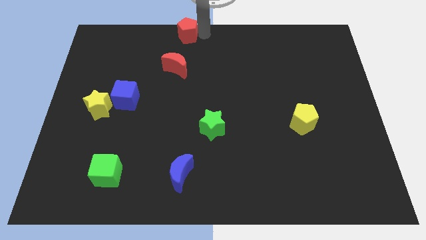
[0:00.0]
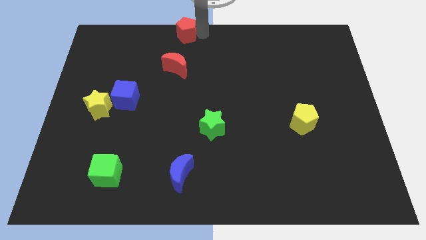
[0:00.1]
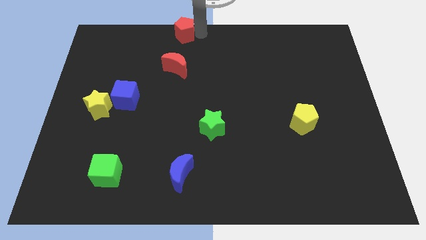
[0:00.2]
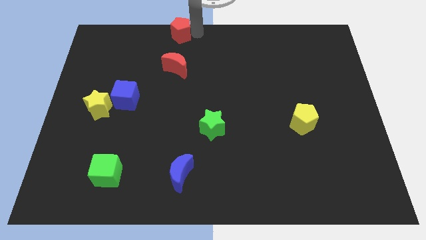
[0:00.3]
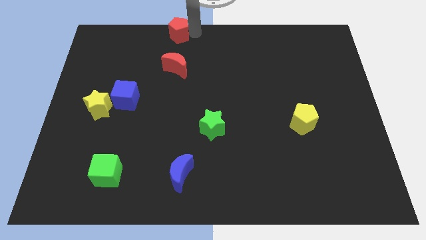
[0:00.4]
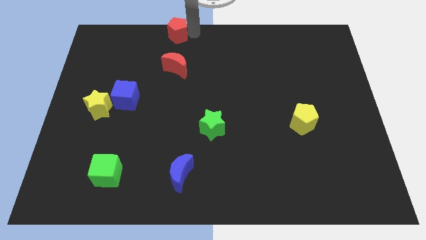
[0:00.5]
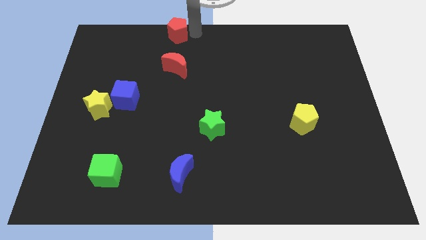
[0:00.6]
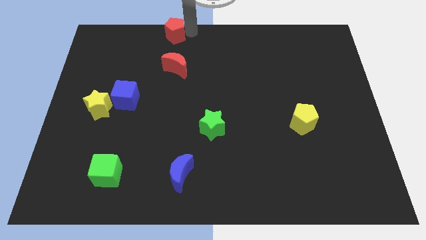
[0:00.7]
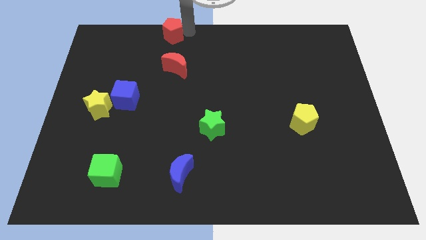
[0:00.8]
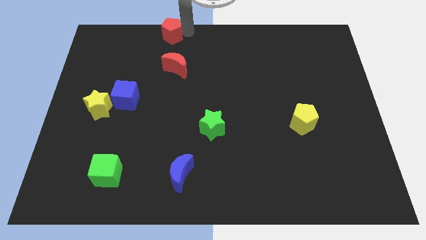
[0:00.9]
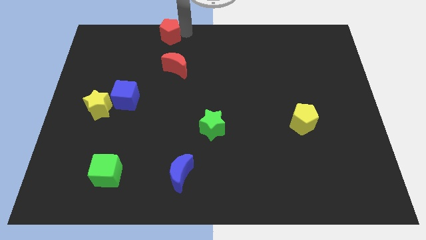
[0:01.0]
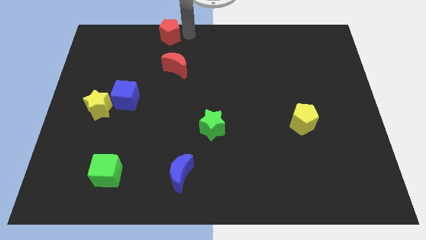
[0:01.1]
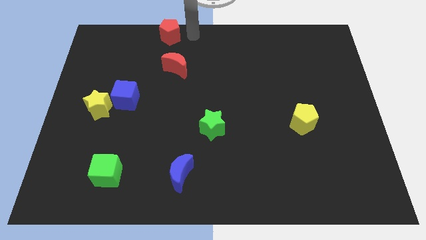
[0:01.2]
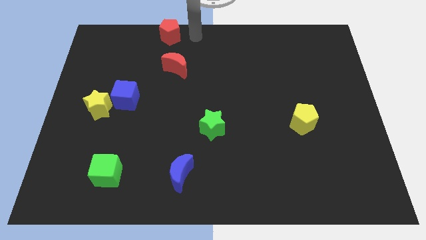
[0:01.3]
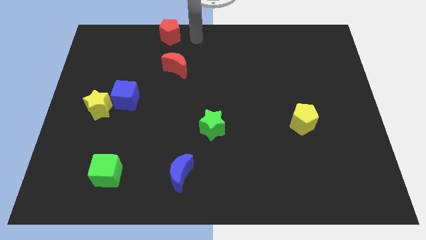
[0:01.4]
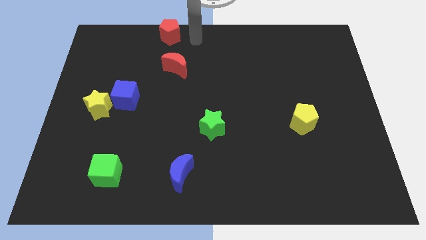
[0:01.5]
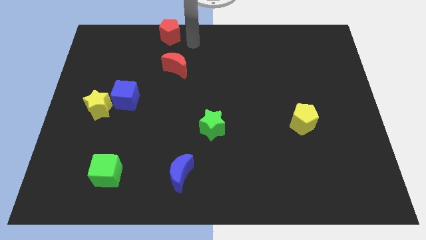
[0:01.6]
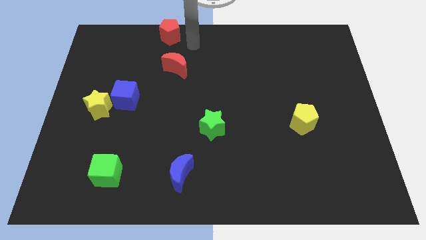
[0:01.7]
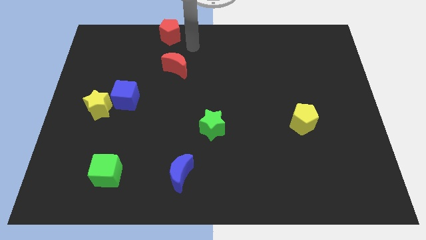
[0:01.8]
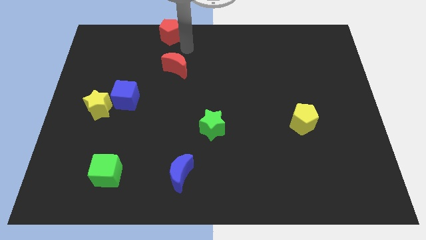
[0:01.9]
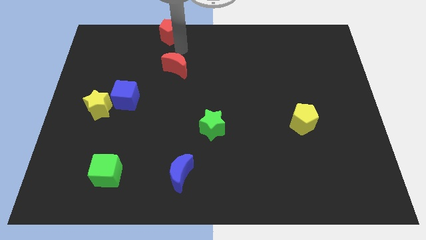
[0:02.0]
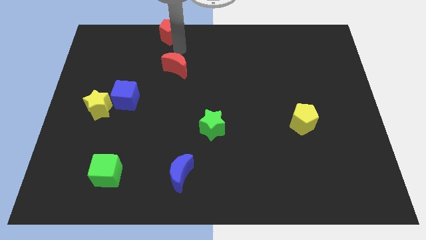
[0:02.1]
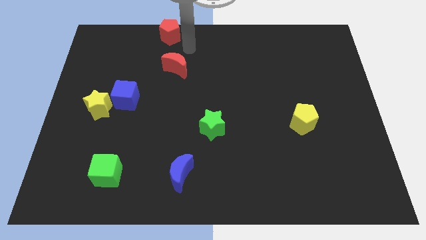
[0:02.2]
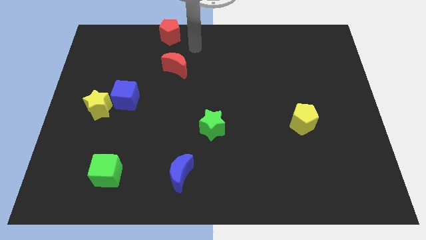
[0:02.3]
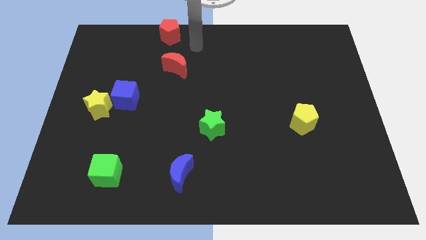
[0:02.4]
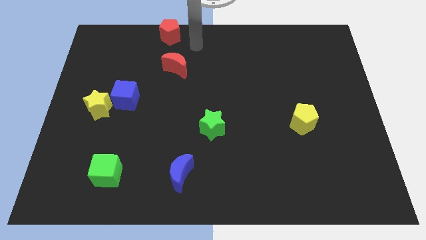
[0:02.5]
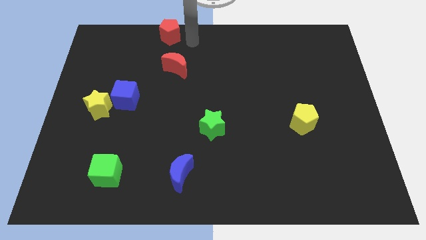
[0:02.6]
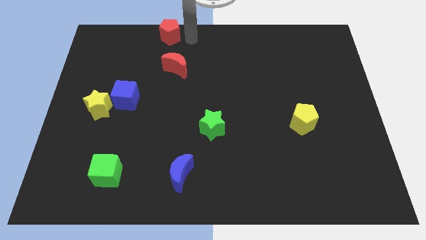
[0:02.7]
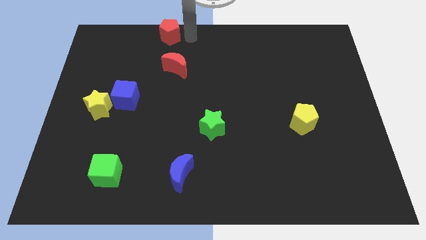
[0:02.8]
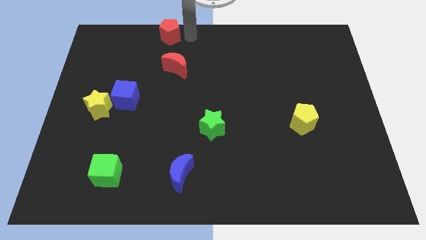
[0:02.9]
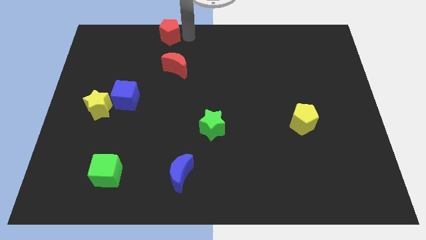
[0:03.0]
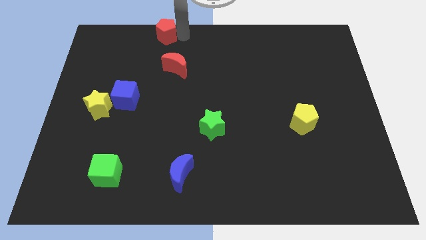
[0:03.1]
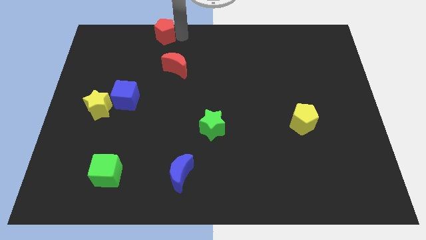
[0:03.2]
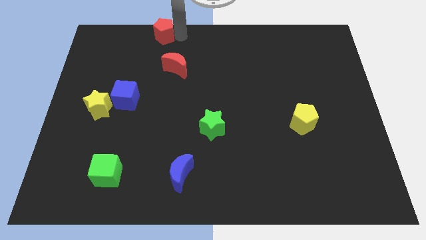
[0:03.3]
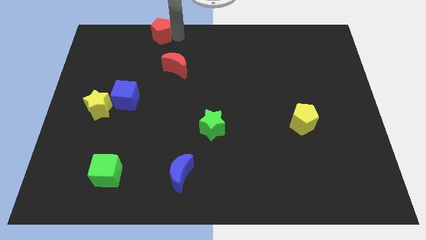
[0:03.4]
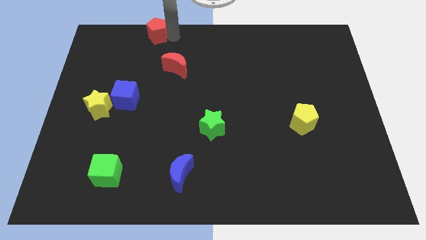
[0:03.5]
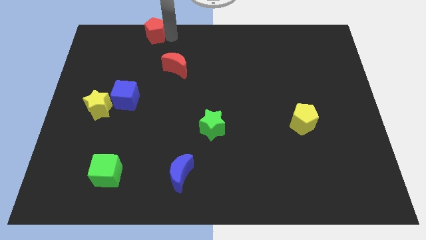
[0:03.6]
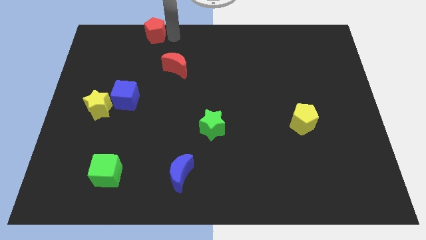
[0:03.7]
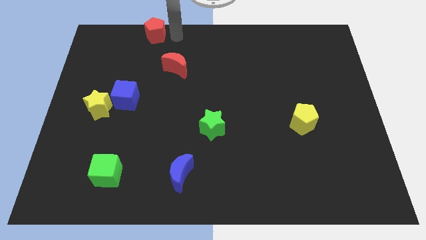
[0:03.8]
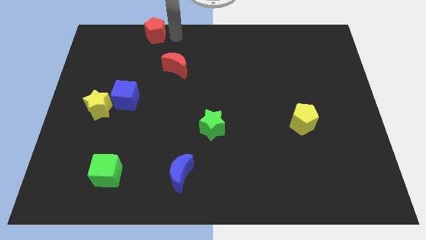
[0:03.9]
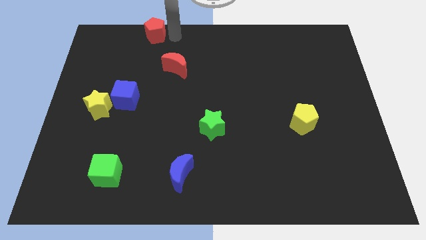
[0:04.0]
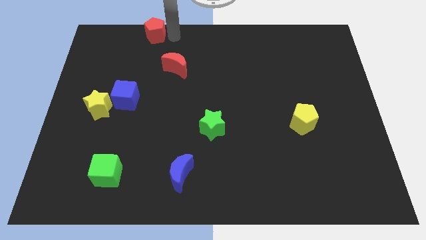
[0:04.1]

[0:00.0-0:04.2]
slide the red pentagon slightly to the left

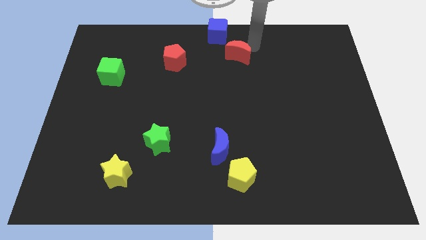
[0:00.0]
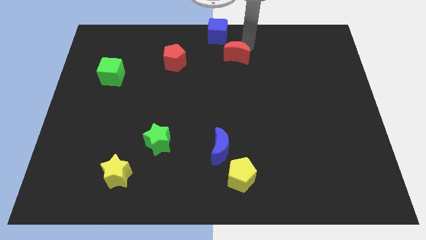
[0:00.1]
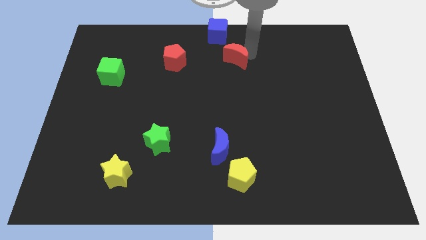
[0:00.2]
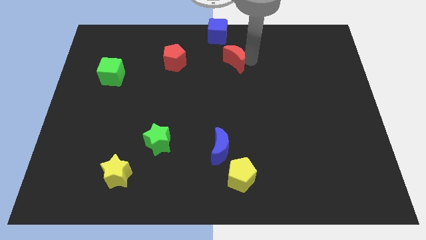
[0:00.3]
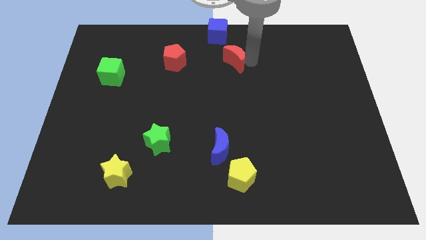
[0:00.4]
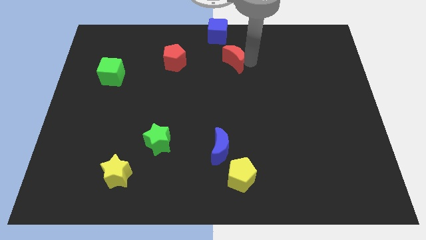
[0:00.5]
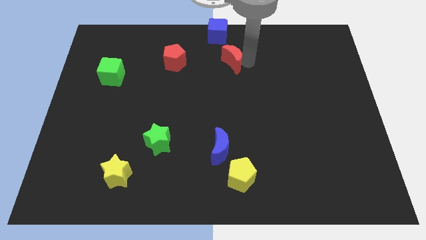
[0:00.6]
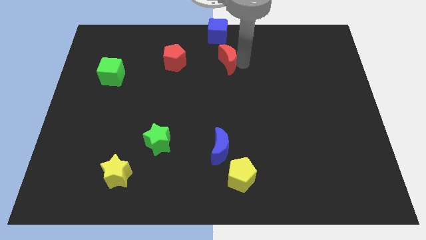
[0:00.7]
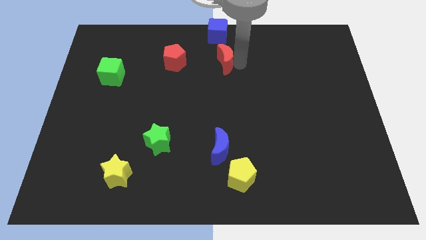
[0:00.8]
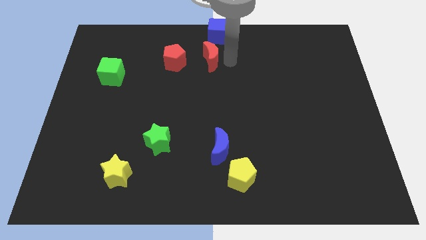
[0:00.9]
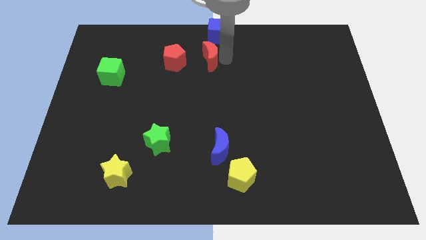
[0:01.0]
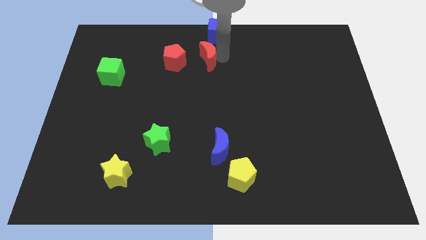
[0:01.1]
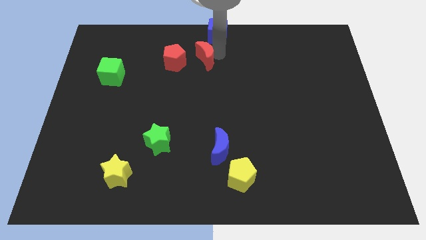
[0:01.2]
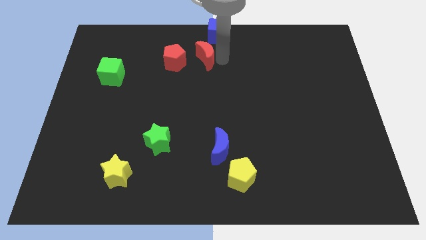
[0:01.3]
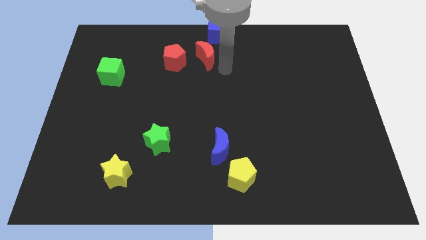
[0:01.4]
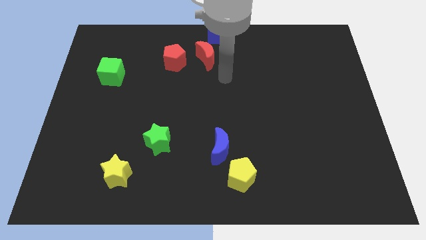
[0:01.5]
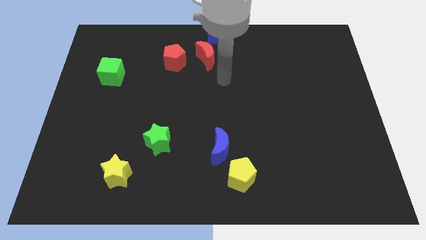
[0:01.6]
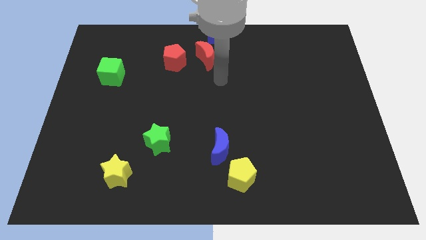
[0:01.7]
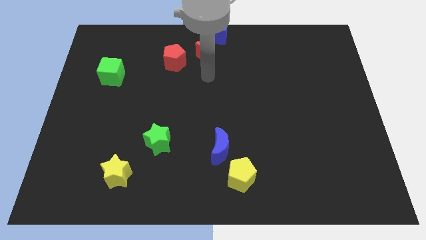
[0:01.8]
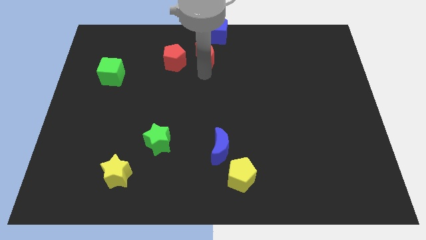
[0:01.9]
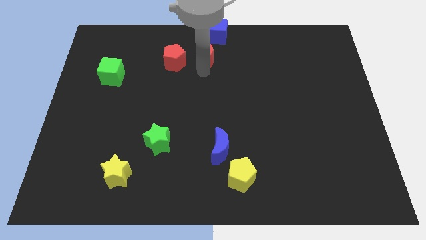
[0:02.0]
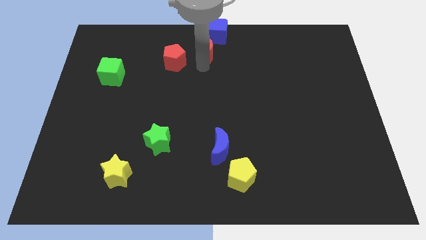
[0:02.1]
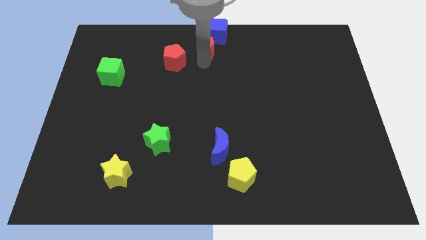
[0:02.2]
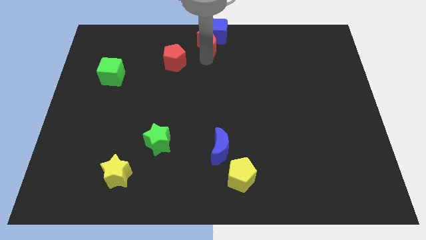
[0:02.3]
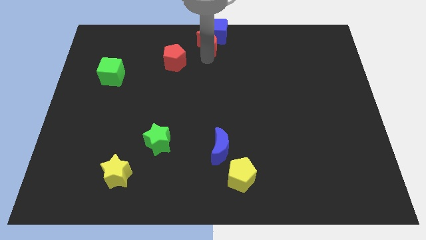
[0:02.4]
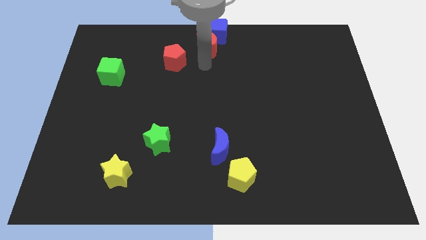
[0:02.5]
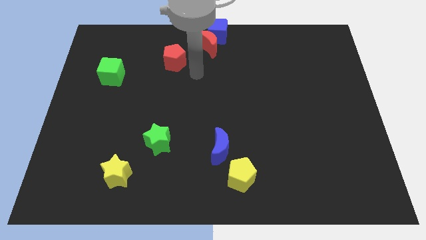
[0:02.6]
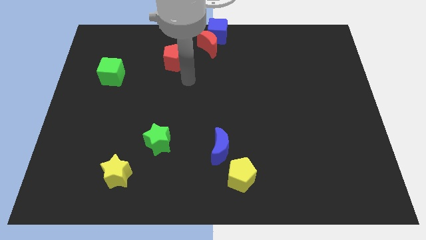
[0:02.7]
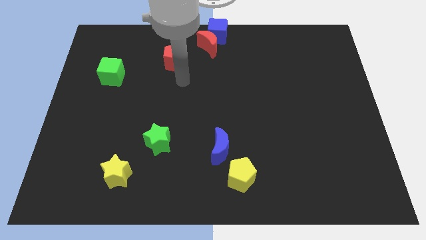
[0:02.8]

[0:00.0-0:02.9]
put the red moon at the bottom left side of blue cube

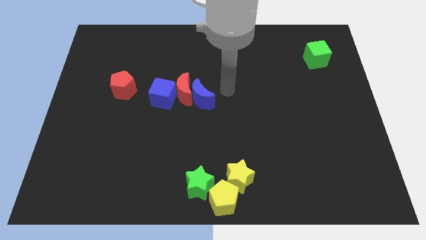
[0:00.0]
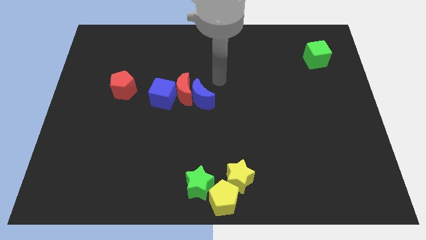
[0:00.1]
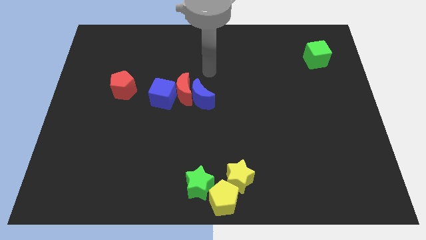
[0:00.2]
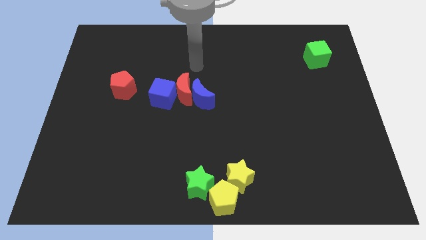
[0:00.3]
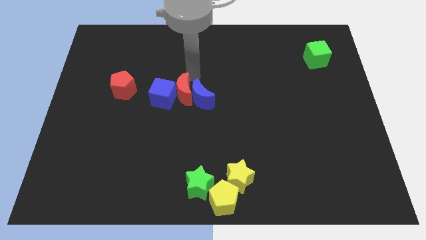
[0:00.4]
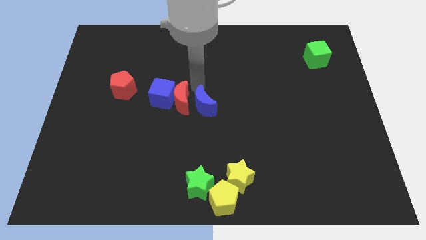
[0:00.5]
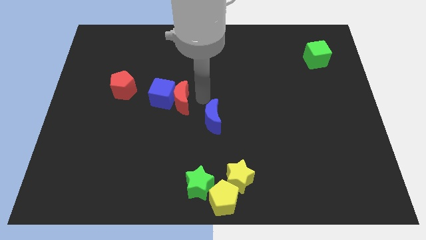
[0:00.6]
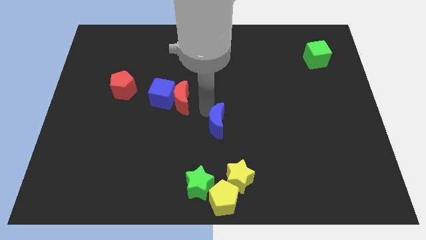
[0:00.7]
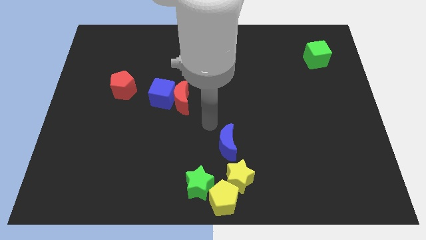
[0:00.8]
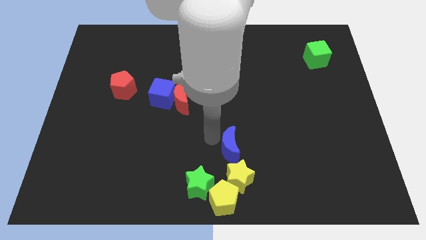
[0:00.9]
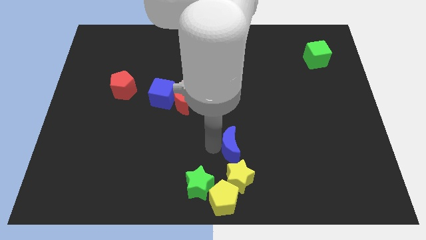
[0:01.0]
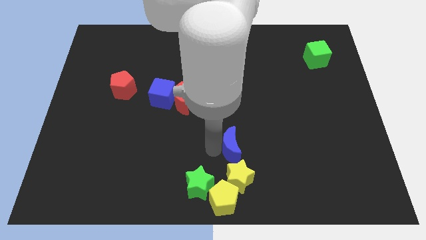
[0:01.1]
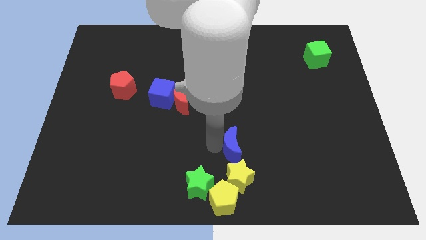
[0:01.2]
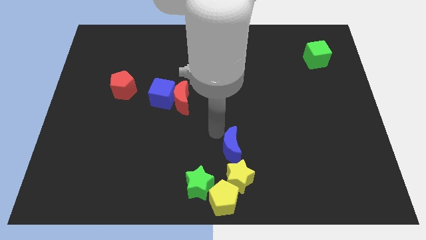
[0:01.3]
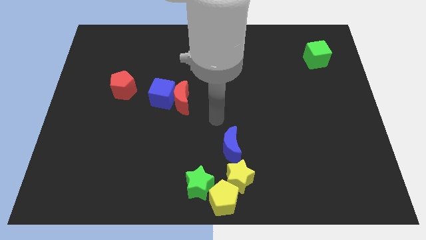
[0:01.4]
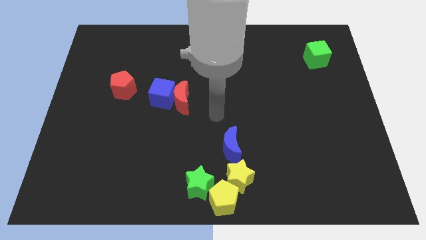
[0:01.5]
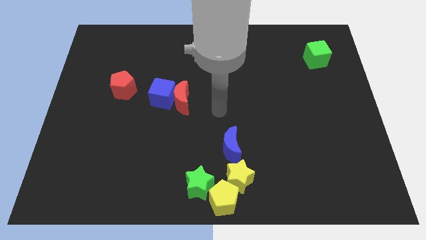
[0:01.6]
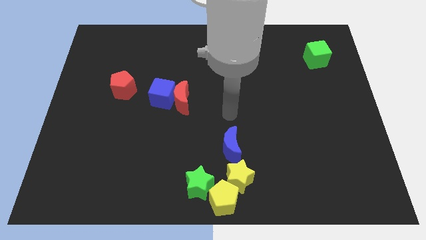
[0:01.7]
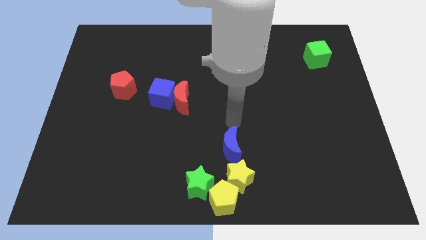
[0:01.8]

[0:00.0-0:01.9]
place blue moon above the yellow star
